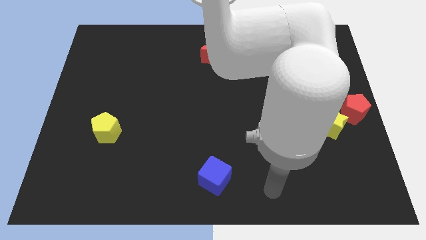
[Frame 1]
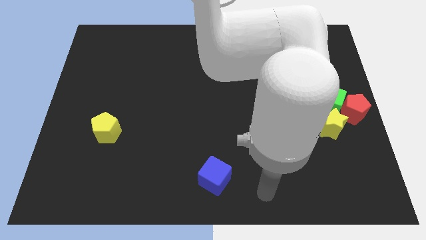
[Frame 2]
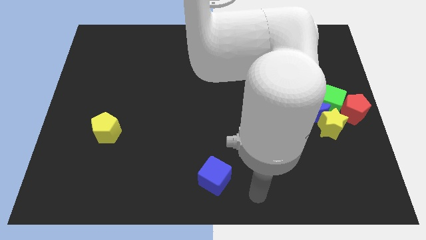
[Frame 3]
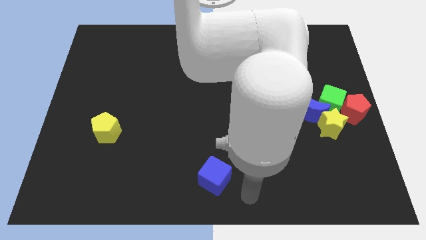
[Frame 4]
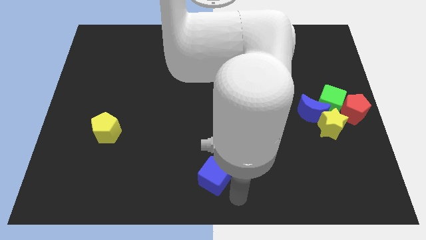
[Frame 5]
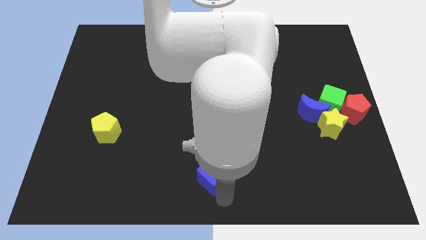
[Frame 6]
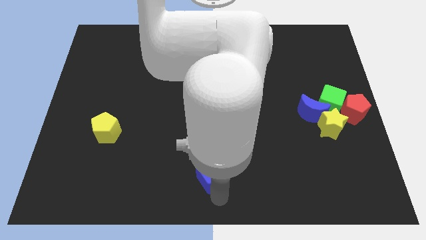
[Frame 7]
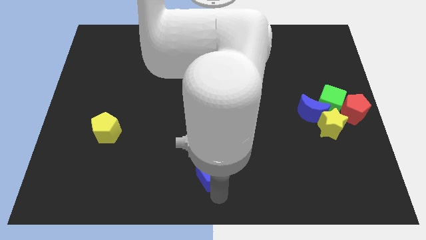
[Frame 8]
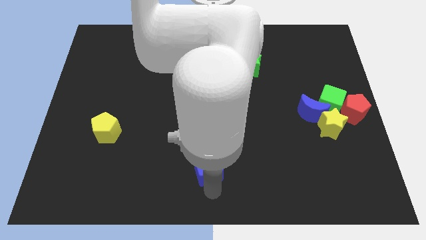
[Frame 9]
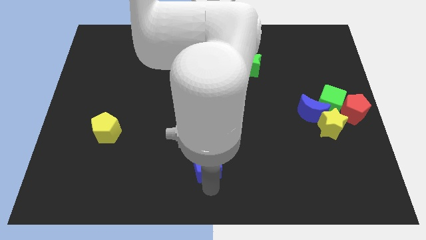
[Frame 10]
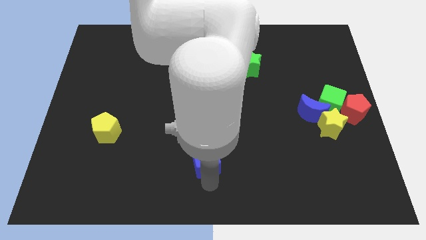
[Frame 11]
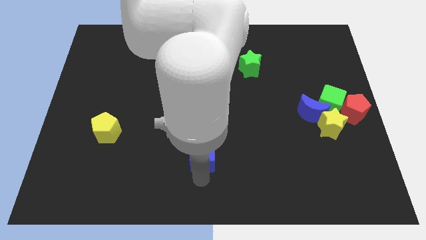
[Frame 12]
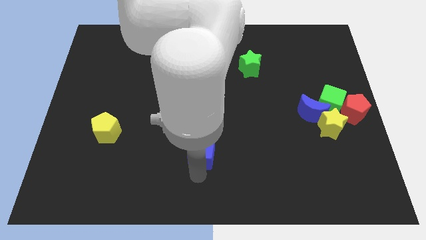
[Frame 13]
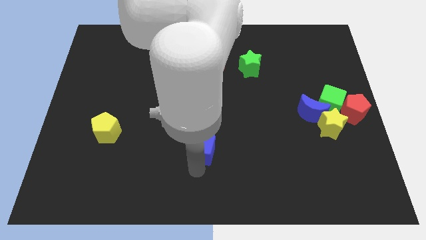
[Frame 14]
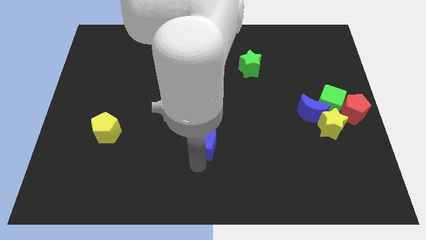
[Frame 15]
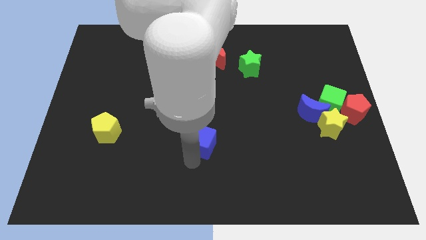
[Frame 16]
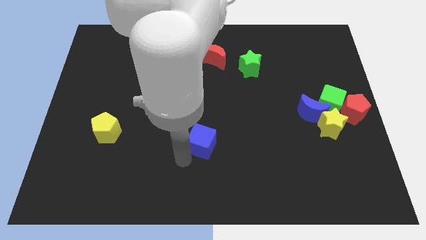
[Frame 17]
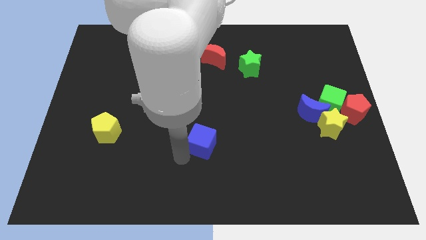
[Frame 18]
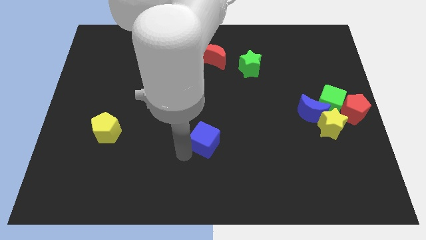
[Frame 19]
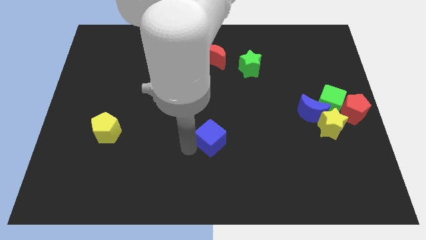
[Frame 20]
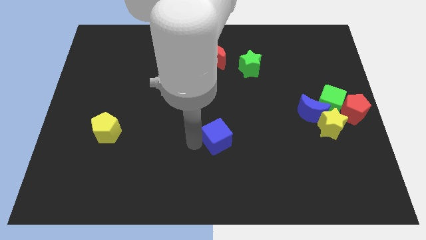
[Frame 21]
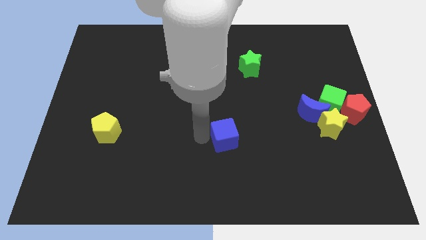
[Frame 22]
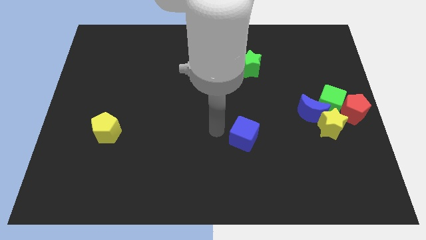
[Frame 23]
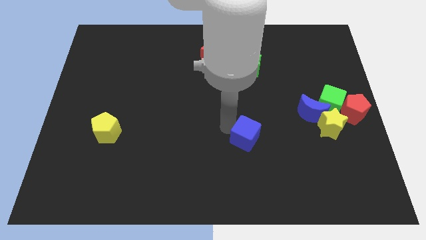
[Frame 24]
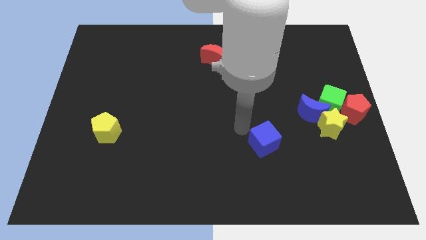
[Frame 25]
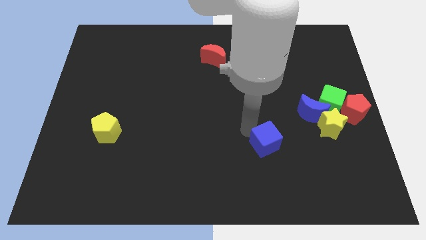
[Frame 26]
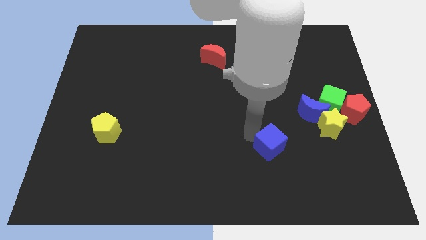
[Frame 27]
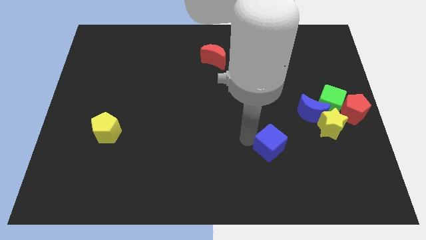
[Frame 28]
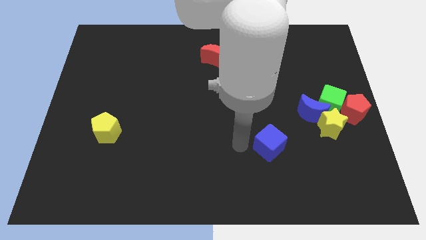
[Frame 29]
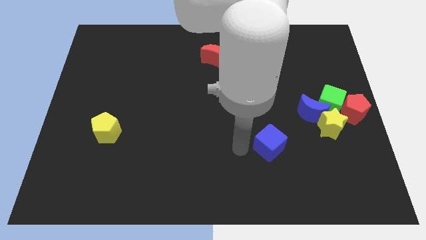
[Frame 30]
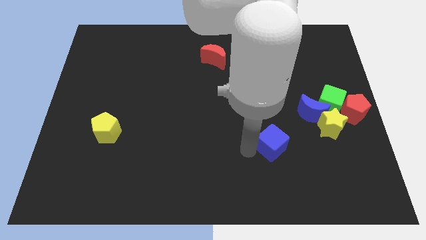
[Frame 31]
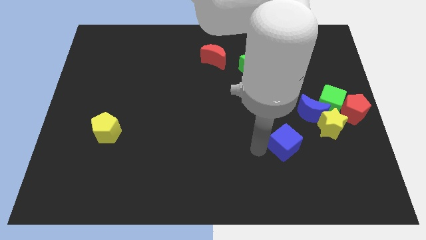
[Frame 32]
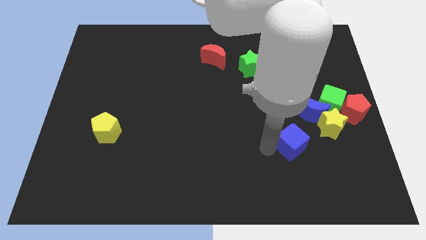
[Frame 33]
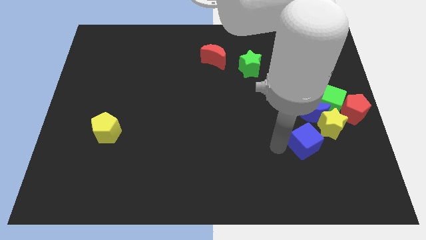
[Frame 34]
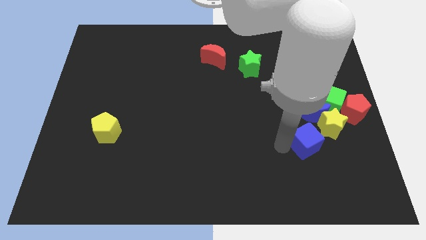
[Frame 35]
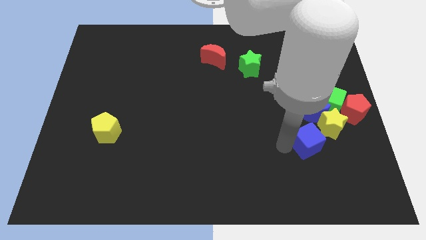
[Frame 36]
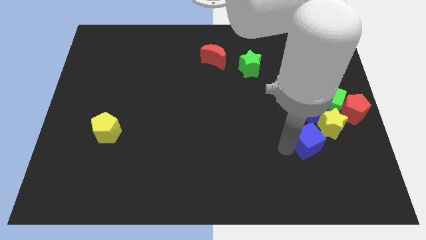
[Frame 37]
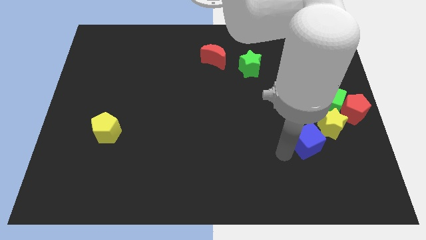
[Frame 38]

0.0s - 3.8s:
move the blue cube diagonal left of yellow star

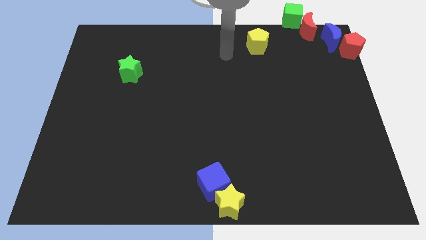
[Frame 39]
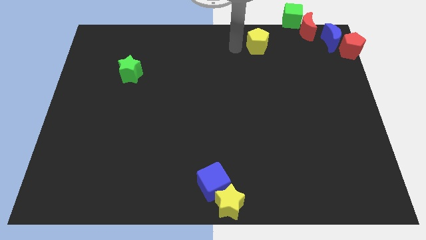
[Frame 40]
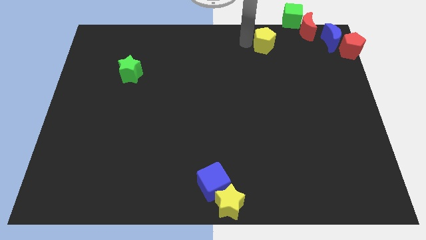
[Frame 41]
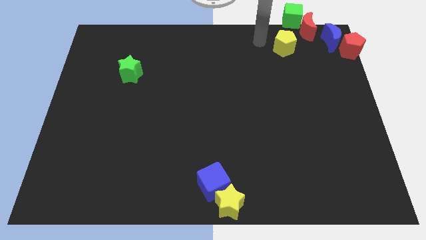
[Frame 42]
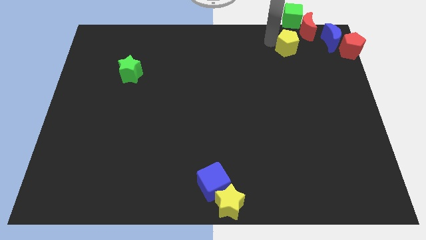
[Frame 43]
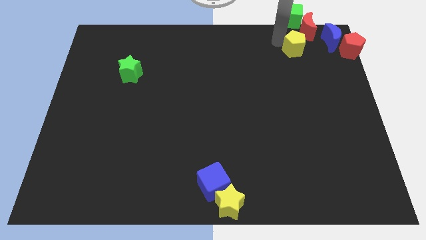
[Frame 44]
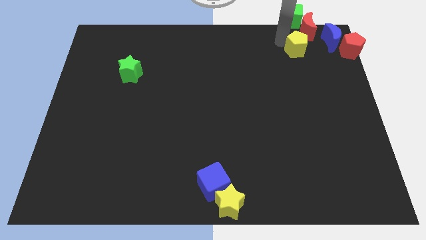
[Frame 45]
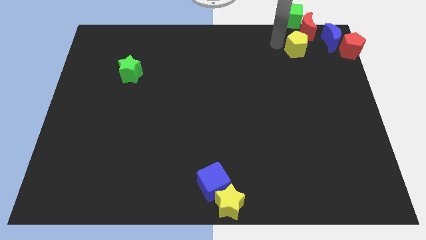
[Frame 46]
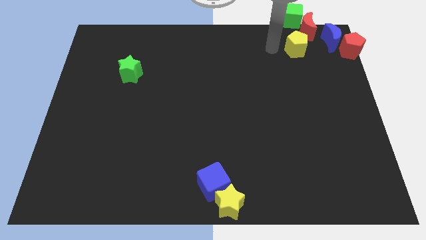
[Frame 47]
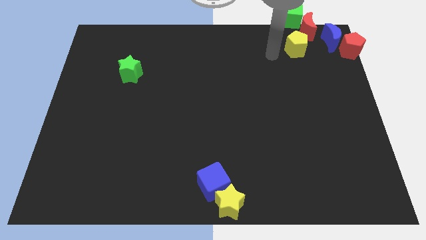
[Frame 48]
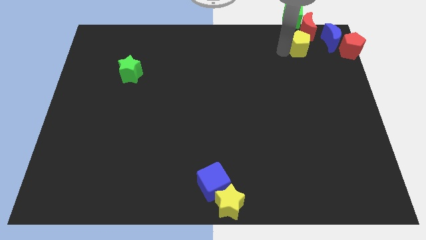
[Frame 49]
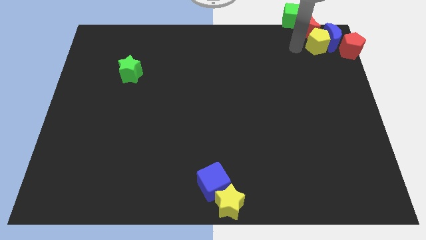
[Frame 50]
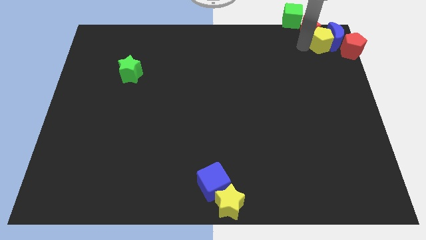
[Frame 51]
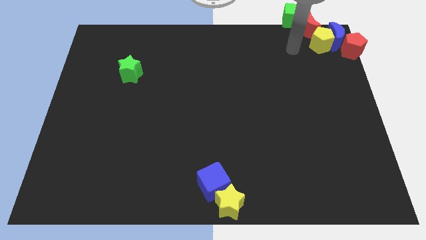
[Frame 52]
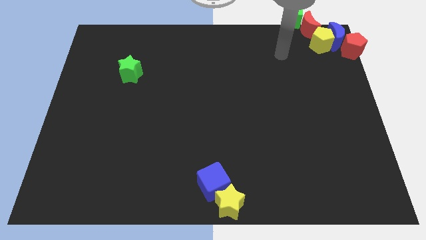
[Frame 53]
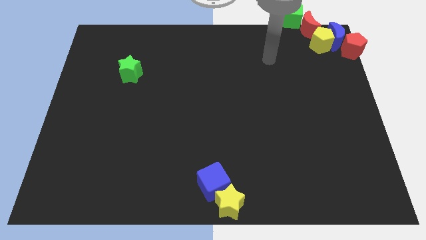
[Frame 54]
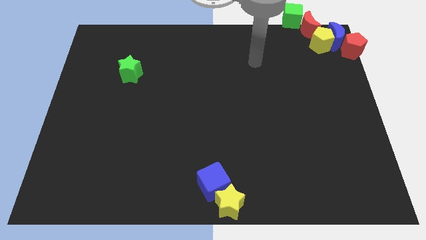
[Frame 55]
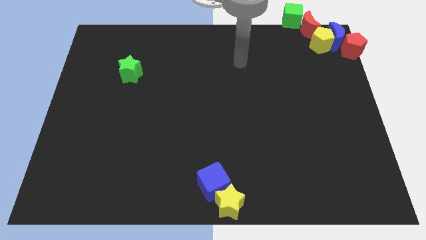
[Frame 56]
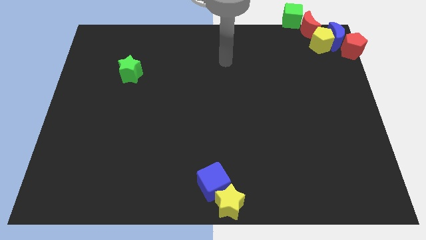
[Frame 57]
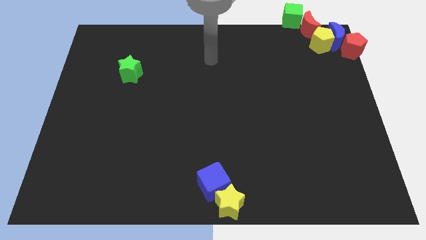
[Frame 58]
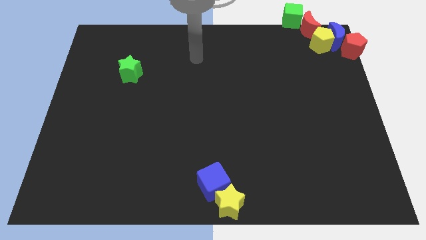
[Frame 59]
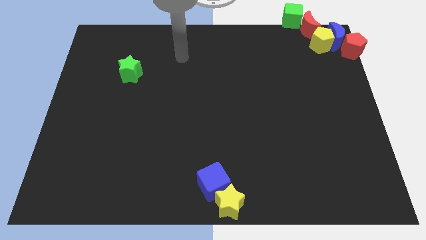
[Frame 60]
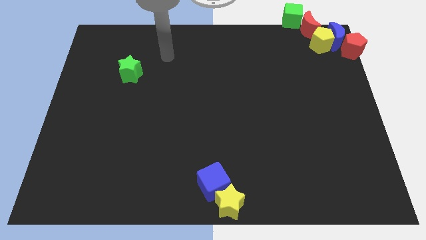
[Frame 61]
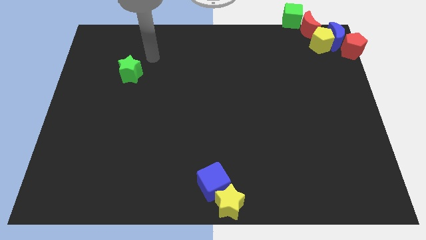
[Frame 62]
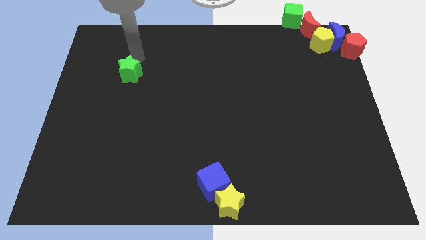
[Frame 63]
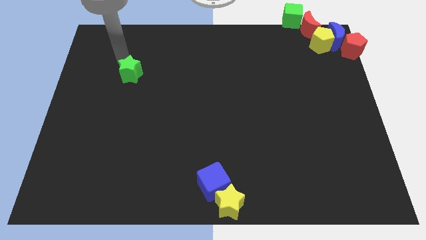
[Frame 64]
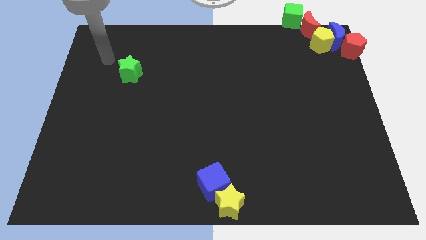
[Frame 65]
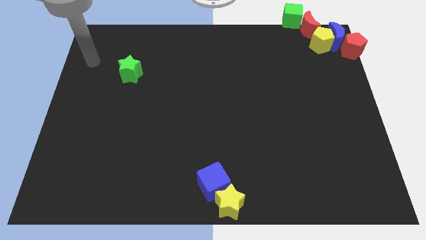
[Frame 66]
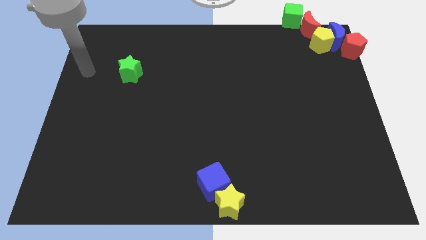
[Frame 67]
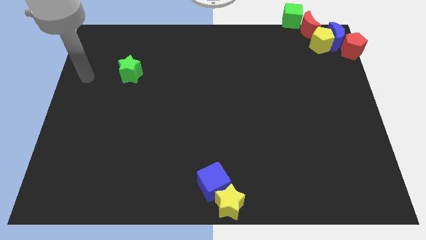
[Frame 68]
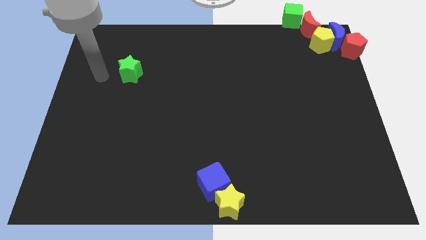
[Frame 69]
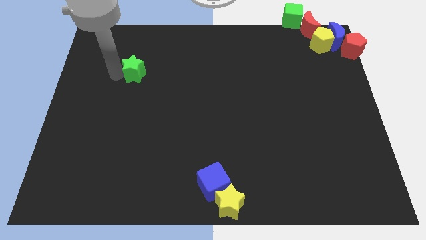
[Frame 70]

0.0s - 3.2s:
push the yellow pentagon into the blue moon

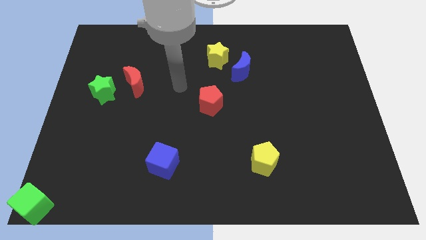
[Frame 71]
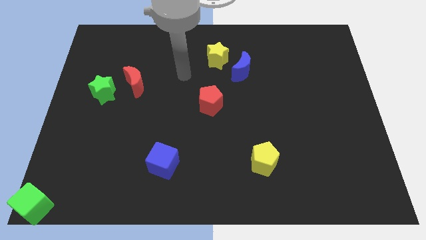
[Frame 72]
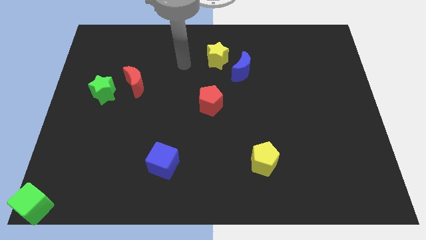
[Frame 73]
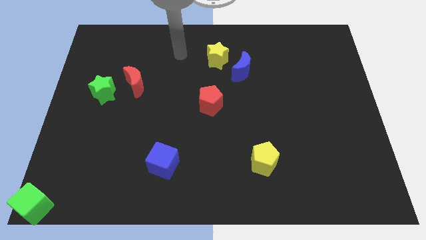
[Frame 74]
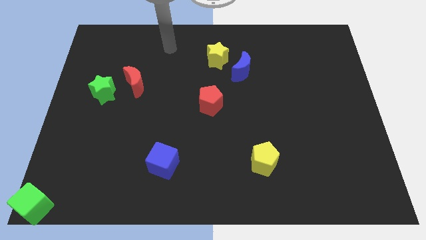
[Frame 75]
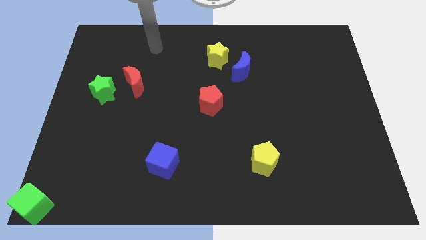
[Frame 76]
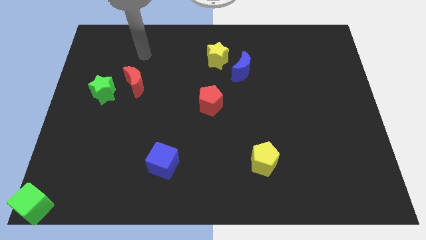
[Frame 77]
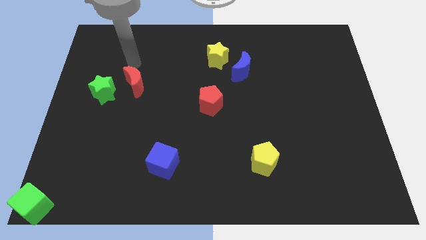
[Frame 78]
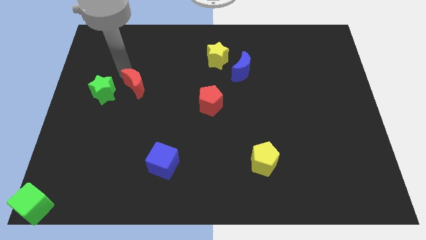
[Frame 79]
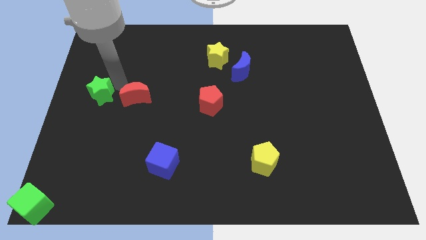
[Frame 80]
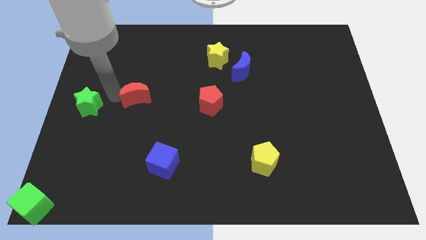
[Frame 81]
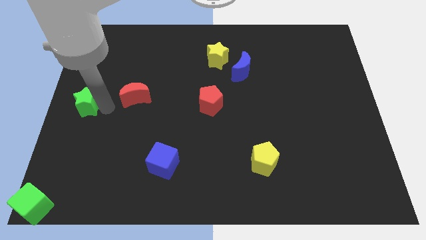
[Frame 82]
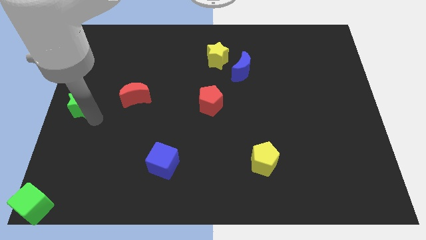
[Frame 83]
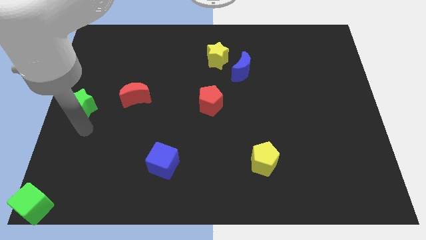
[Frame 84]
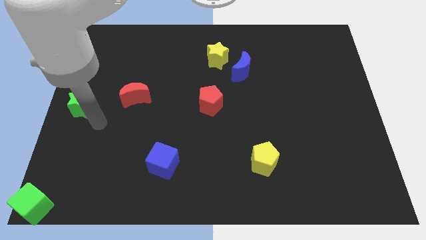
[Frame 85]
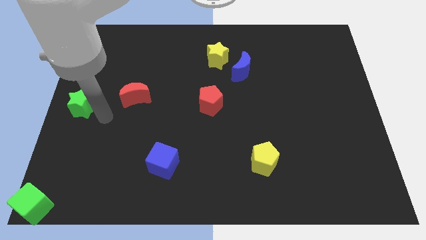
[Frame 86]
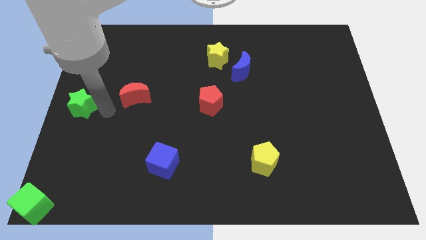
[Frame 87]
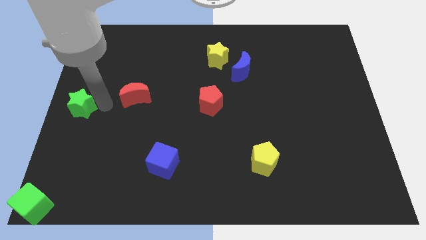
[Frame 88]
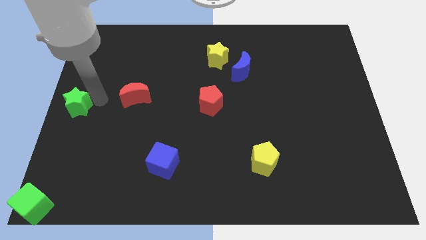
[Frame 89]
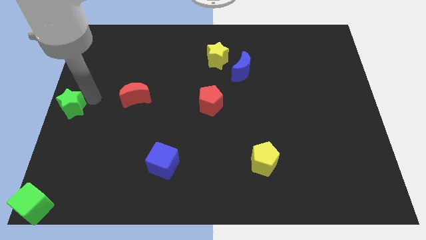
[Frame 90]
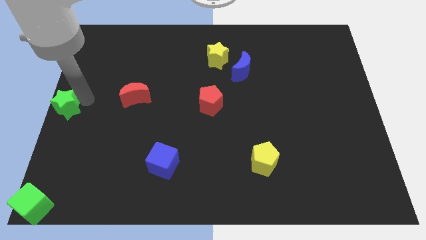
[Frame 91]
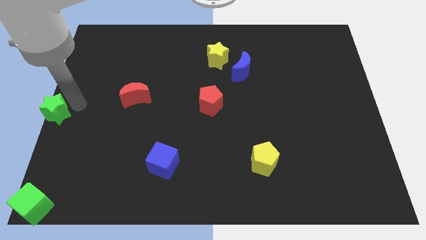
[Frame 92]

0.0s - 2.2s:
move green star to the left center of the board
